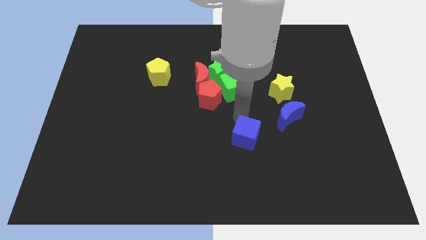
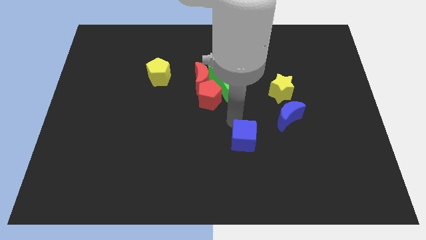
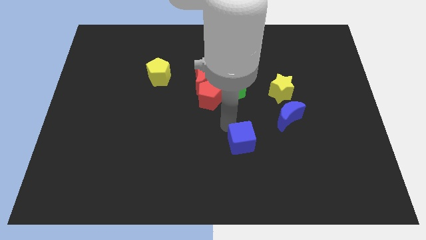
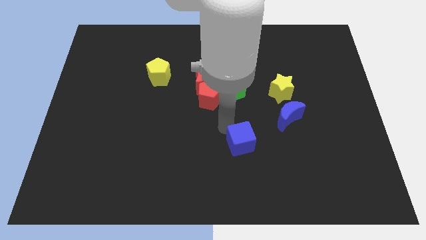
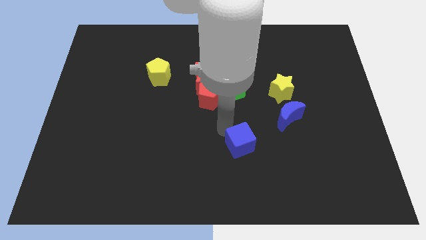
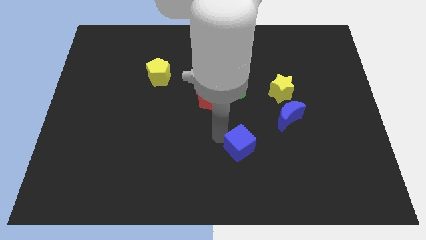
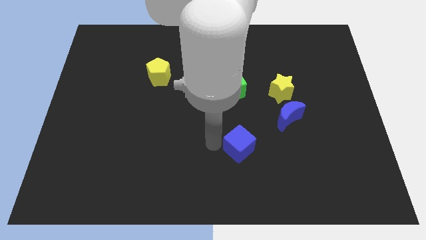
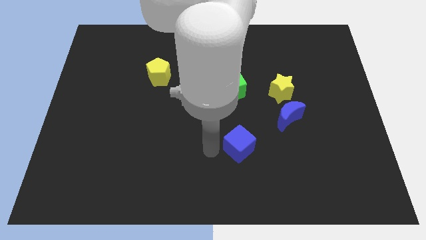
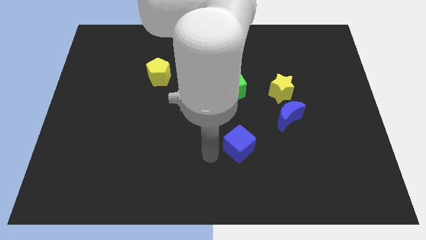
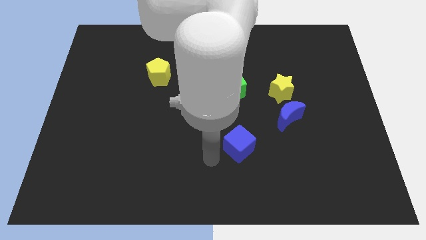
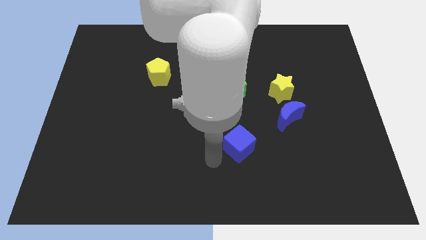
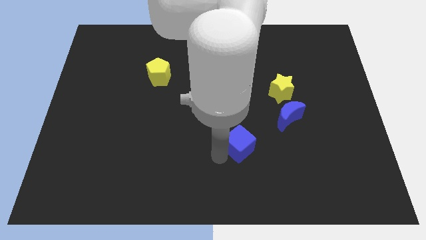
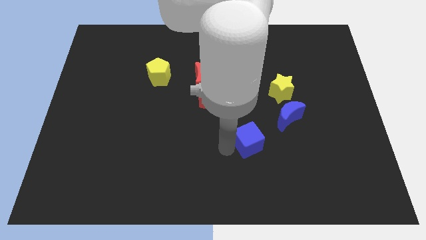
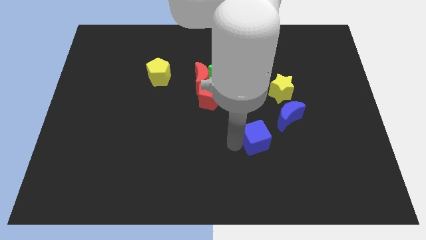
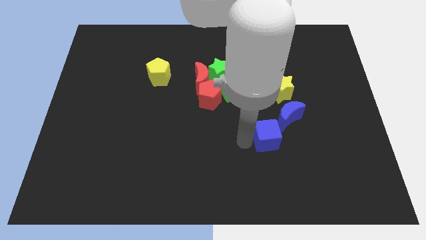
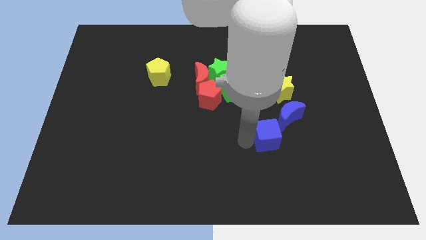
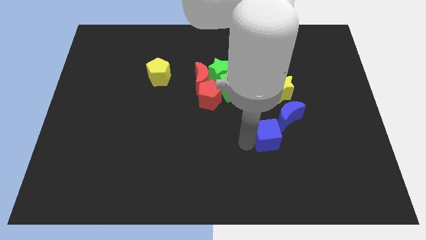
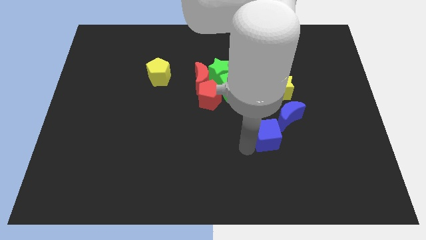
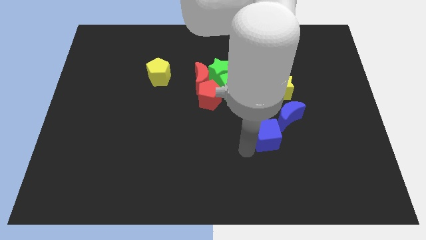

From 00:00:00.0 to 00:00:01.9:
push the blue cube into blue moon diagonal left bottom

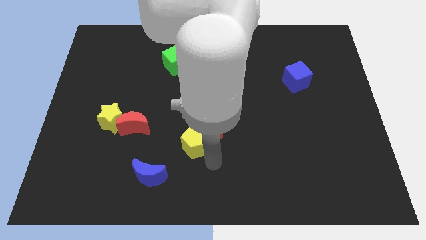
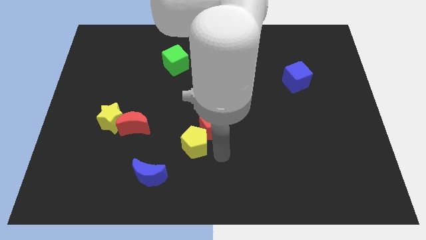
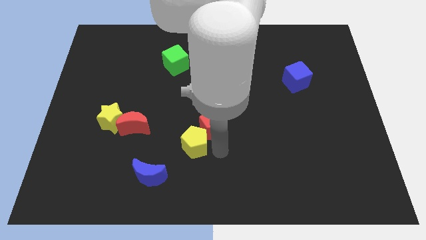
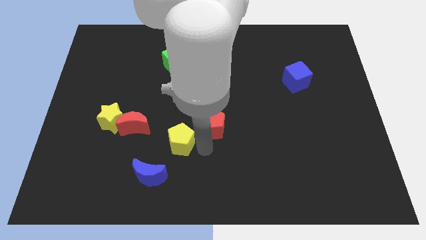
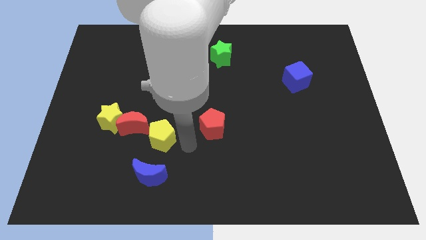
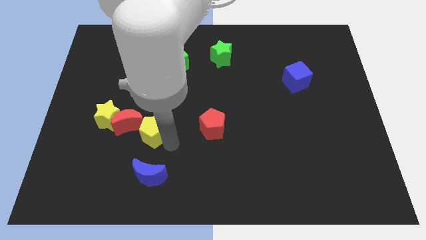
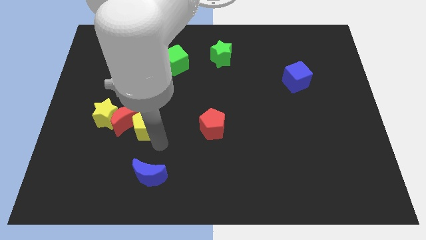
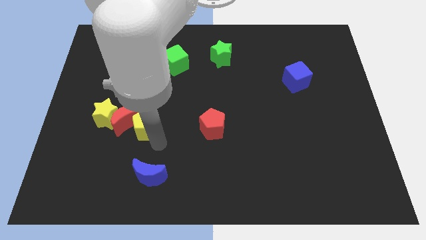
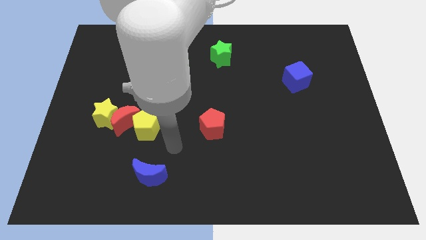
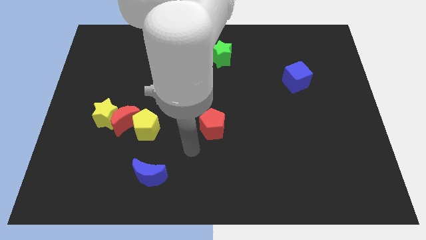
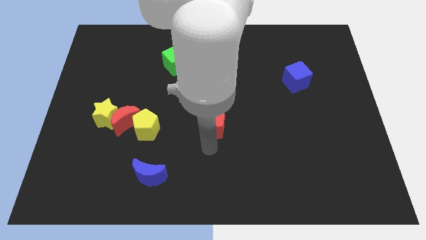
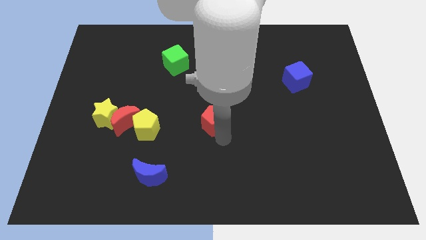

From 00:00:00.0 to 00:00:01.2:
push the yellow star and the red crescent with the yellow pentagon towards the left center of the board

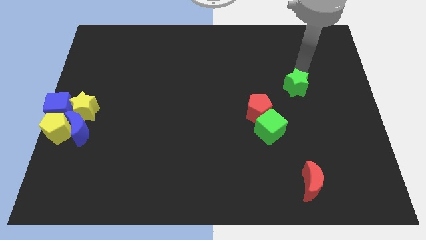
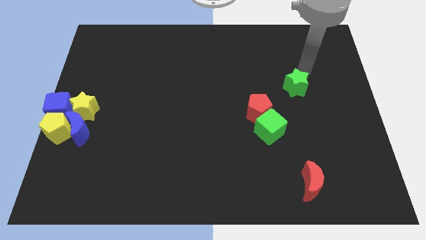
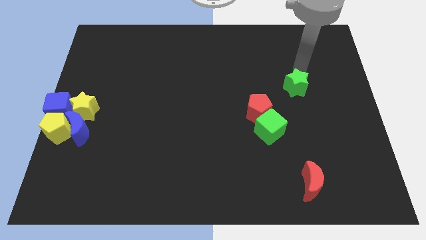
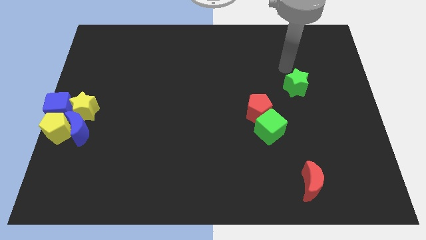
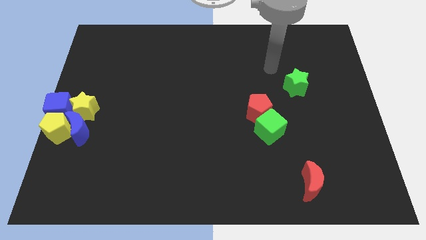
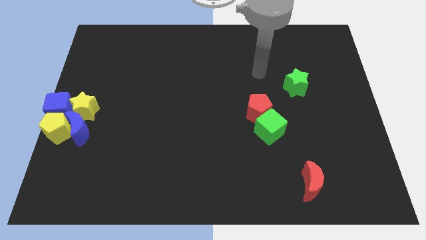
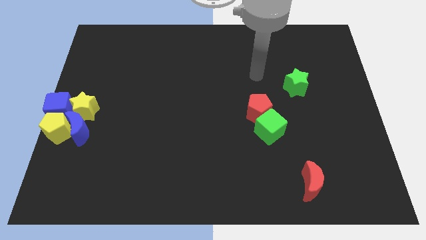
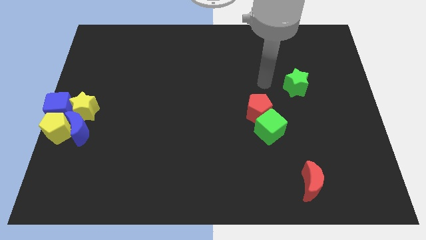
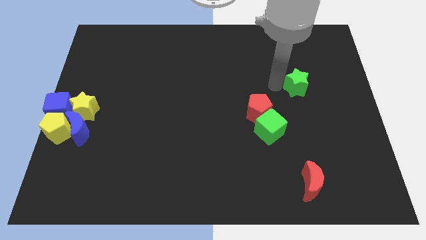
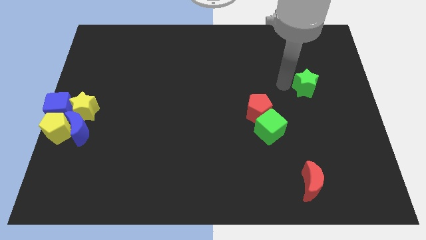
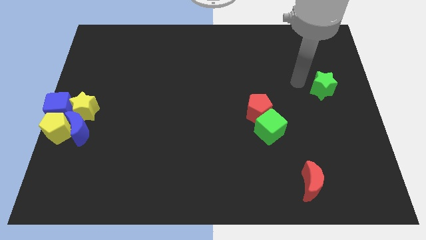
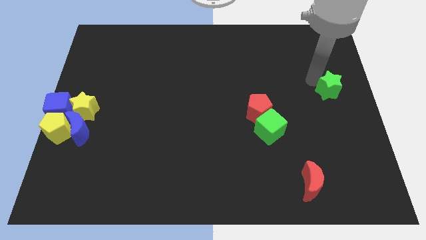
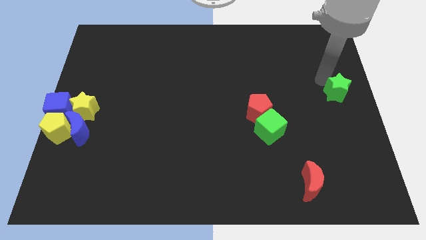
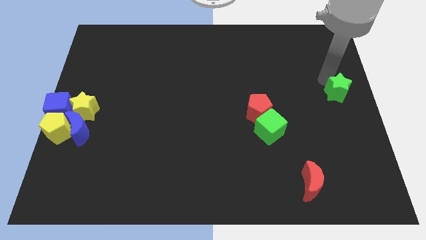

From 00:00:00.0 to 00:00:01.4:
drag the yellow star to the right side of the board

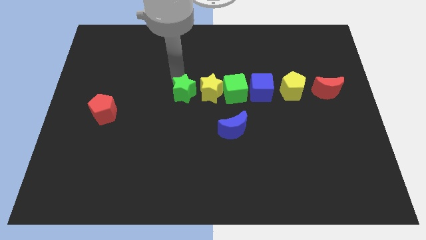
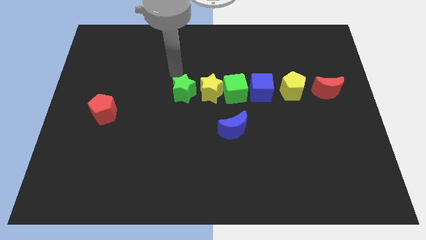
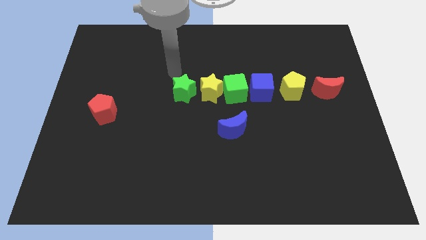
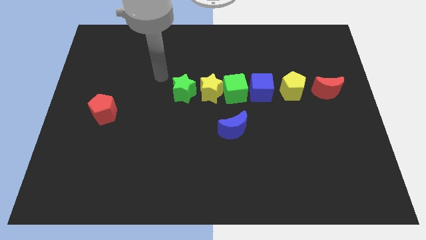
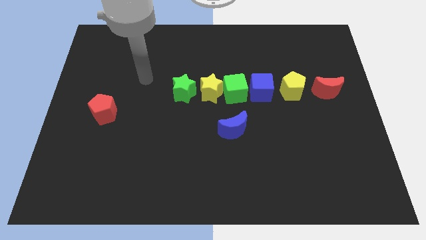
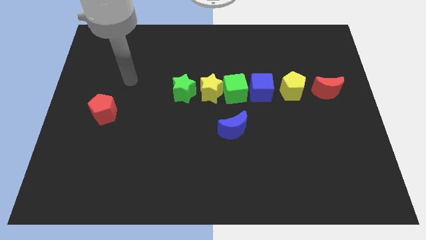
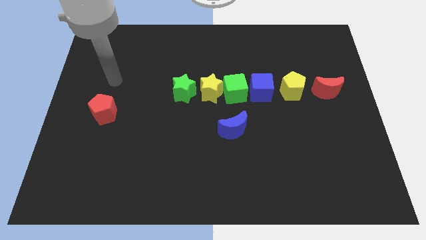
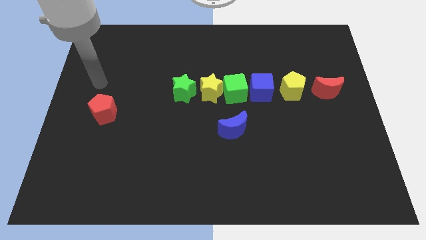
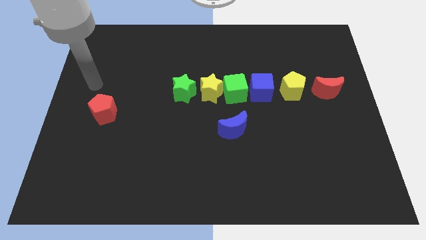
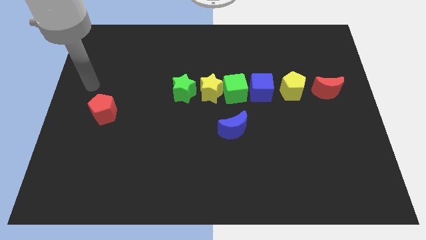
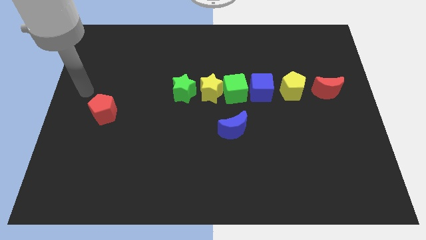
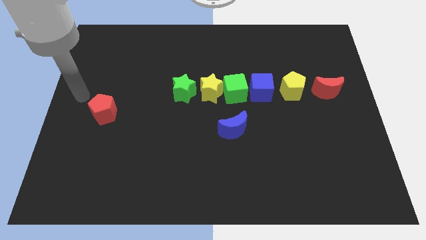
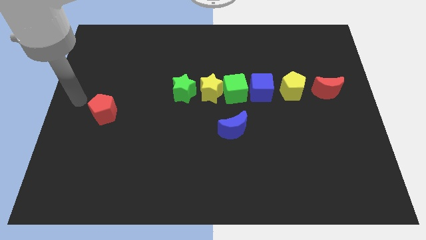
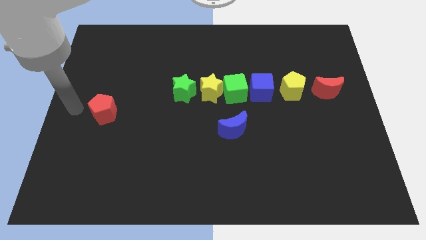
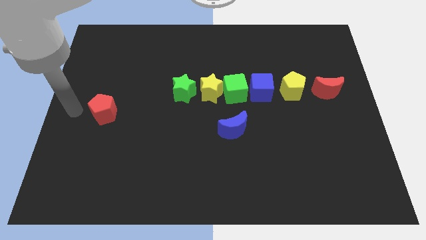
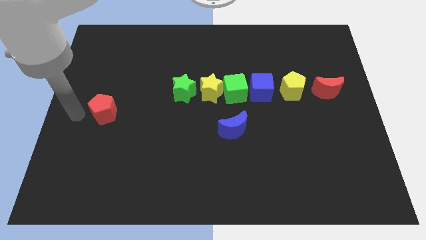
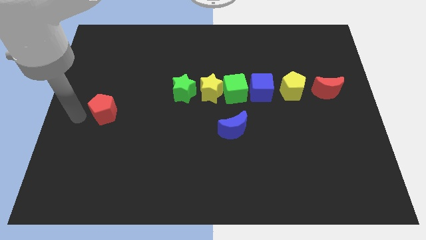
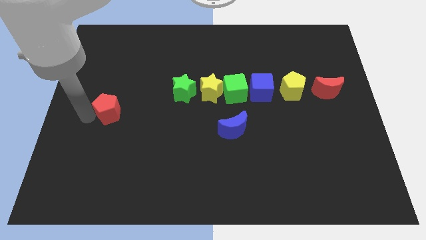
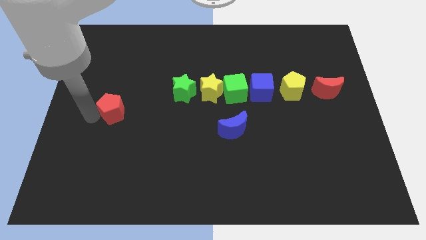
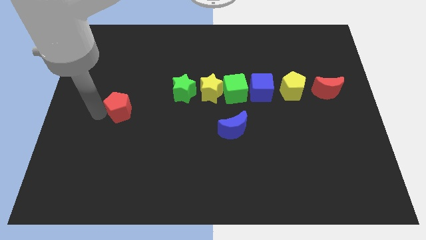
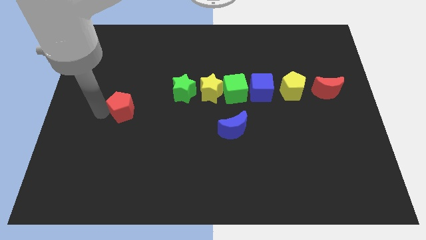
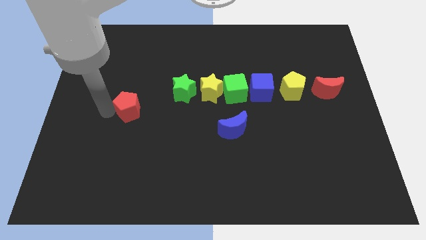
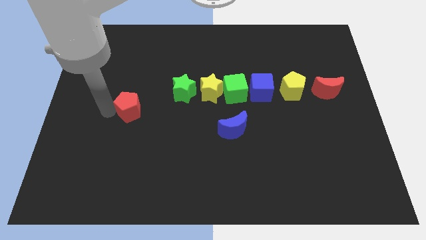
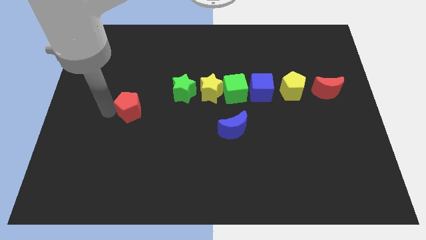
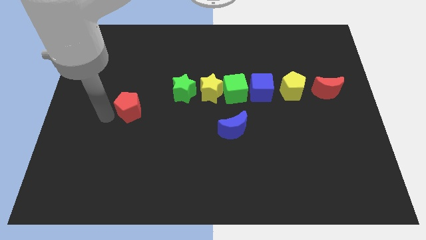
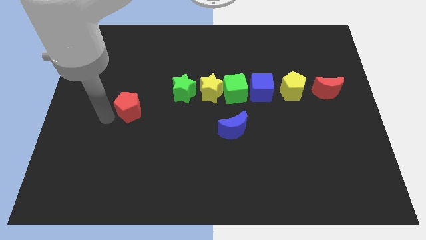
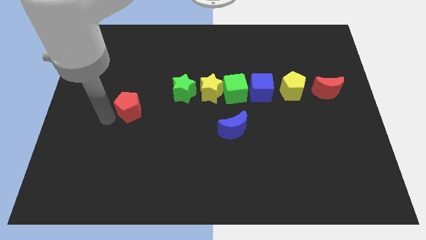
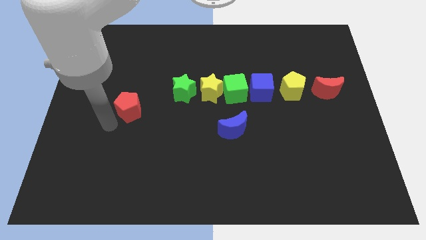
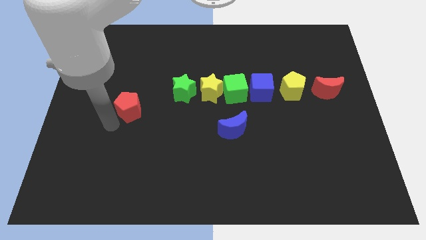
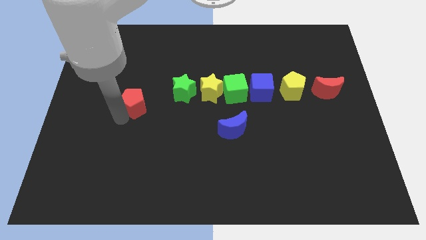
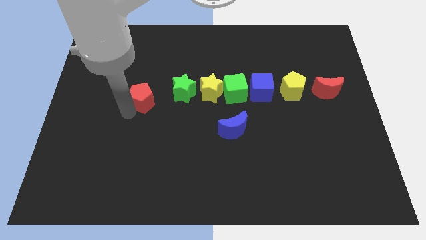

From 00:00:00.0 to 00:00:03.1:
push the red pentagon to the left side of the green star

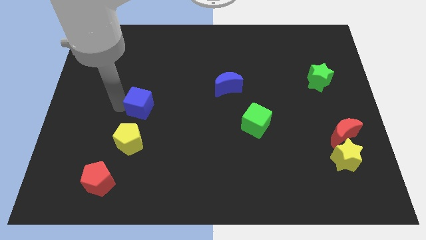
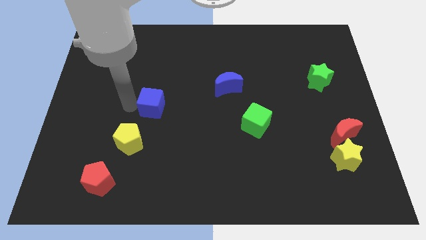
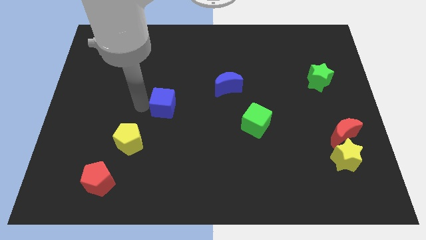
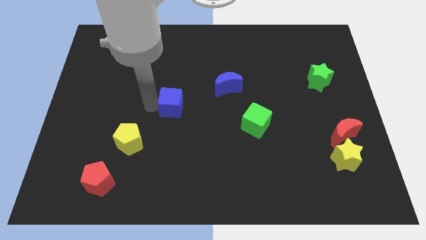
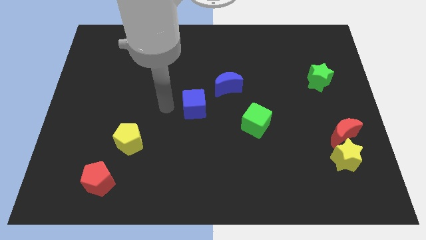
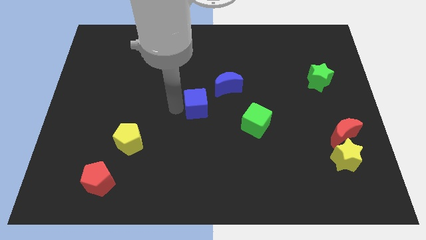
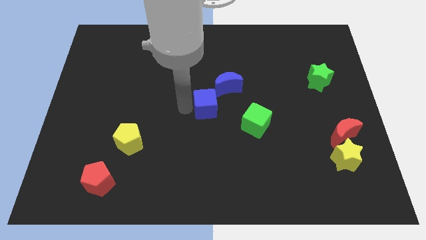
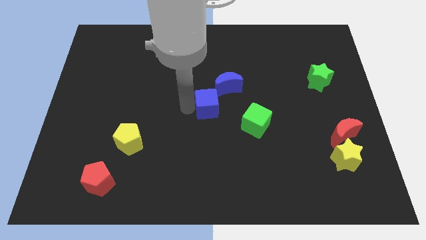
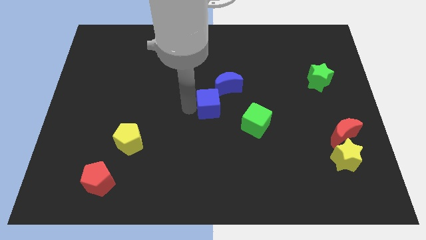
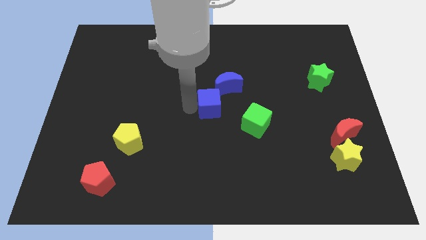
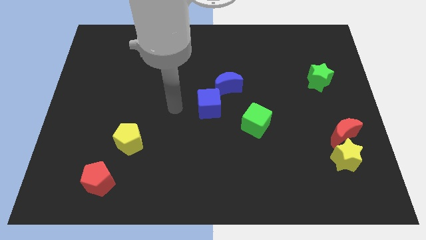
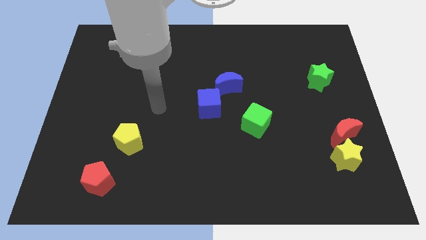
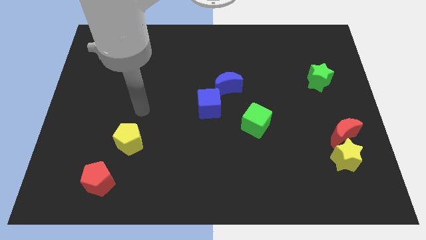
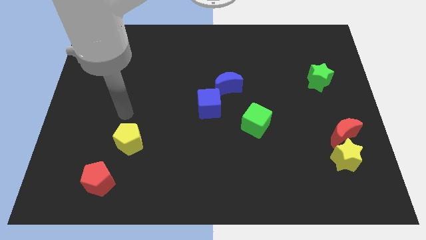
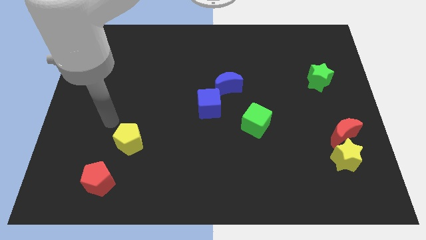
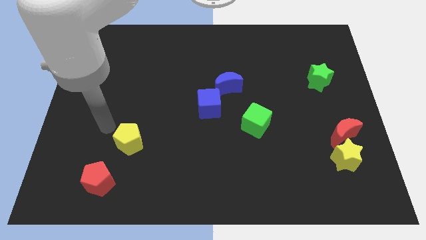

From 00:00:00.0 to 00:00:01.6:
push the blue cube close to the bottom of the blue crescent
